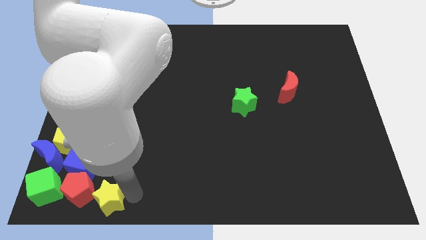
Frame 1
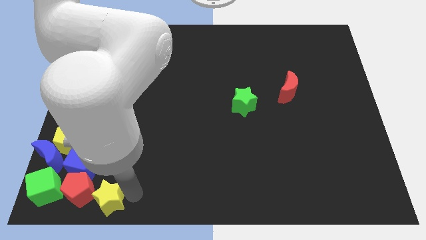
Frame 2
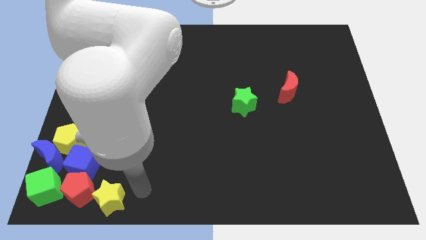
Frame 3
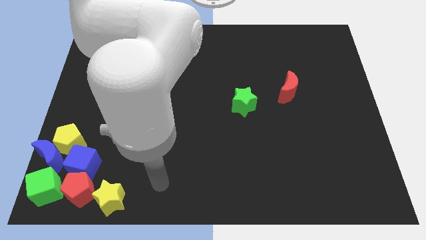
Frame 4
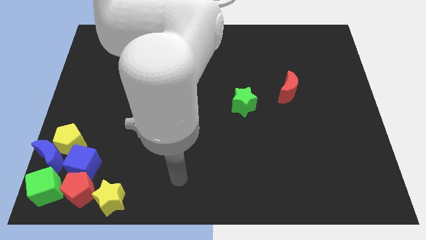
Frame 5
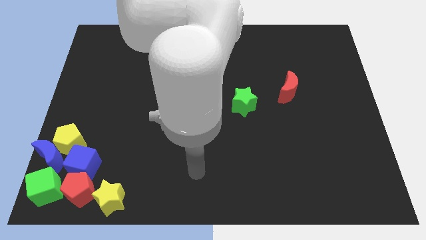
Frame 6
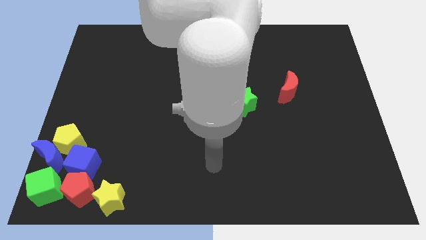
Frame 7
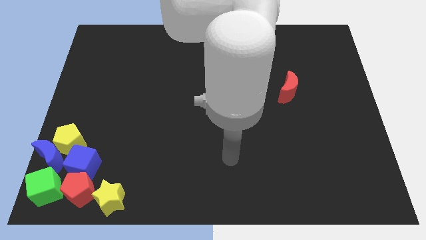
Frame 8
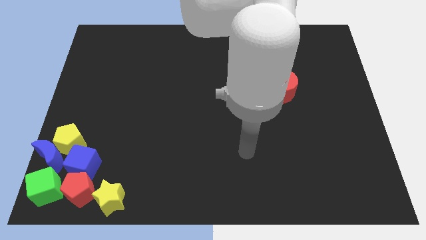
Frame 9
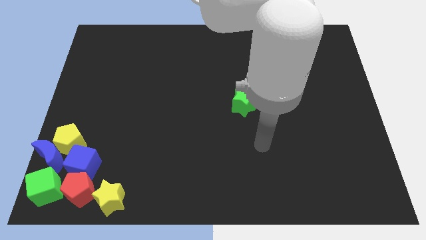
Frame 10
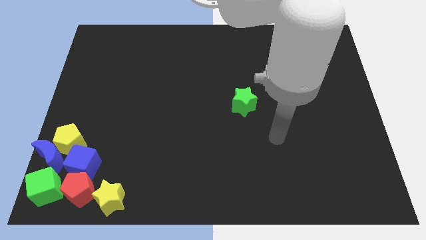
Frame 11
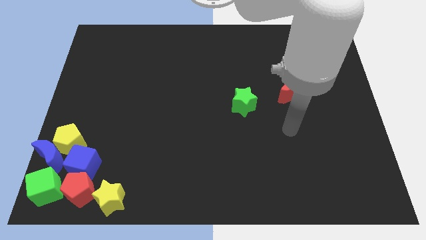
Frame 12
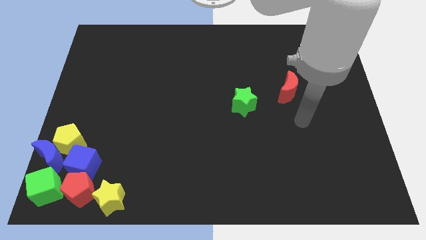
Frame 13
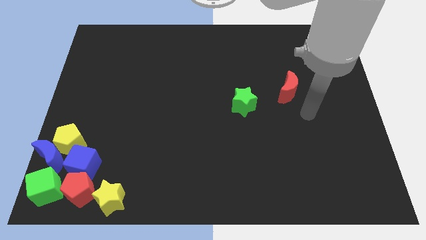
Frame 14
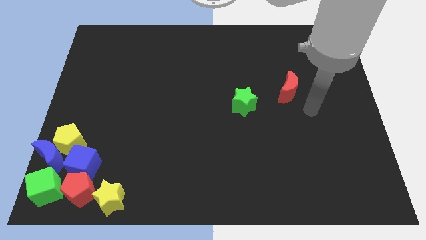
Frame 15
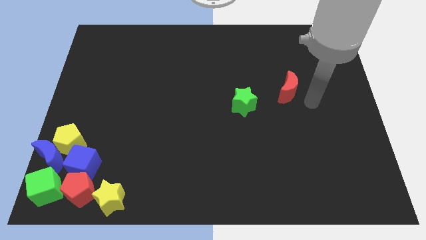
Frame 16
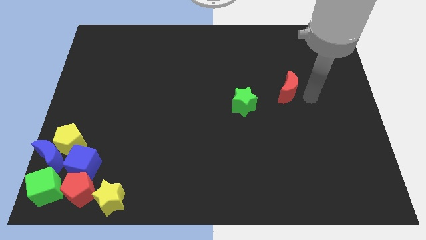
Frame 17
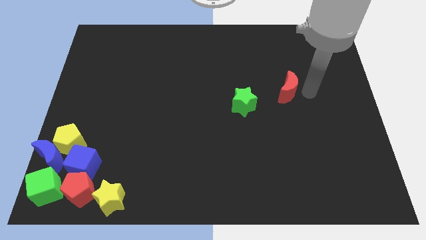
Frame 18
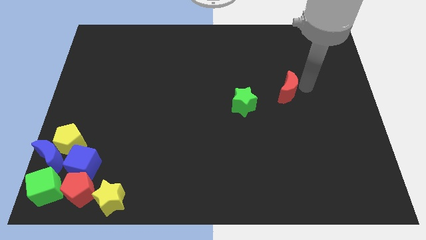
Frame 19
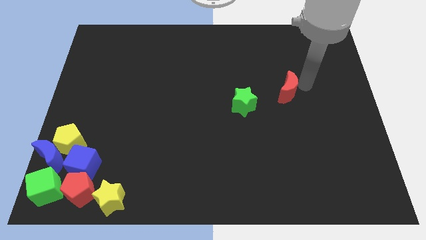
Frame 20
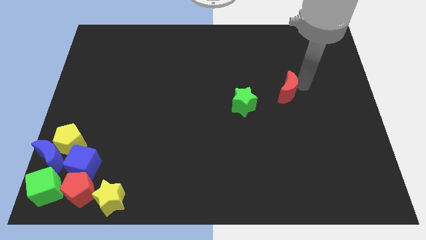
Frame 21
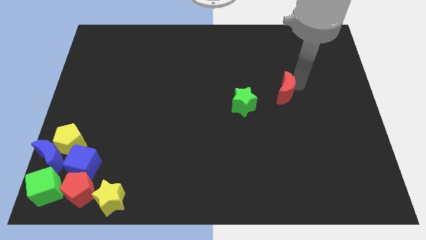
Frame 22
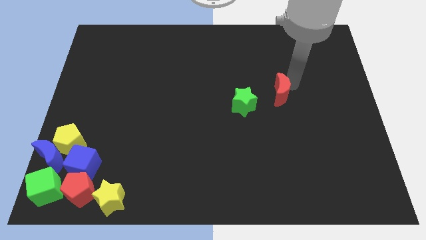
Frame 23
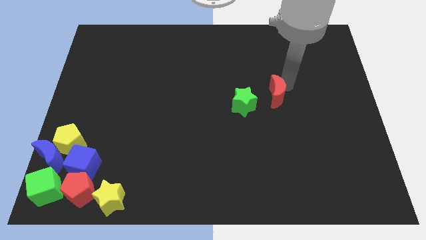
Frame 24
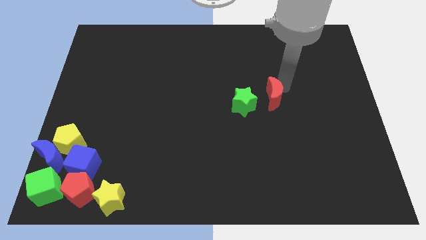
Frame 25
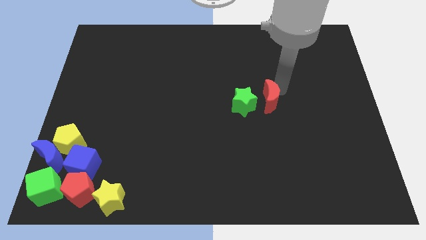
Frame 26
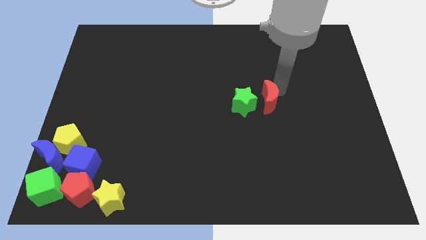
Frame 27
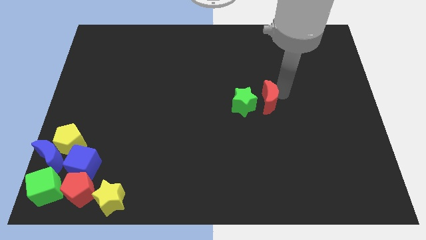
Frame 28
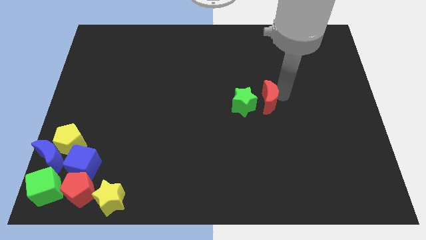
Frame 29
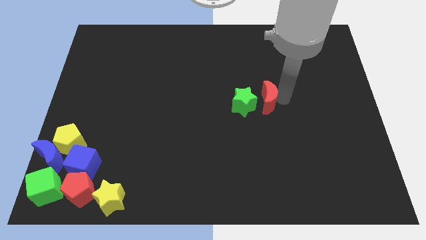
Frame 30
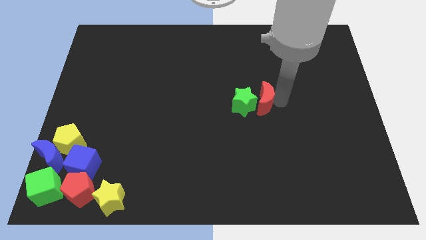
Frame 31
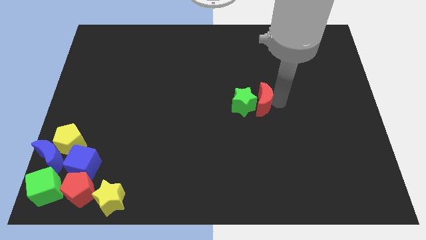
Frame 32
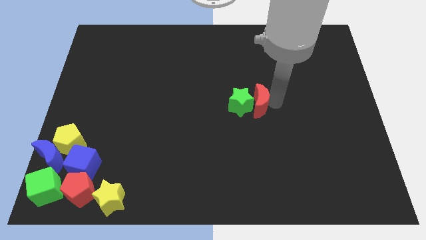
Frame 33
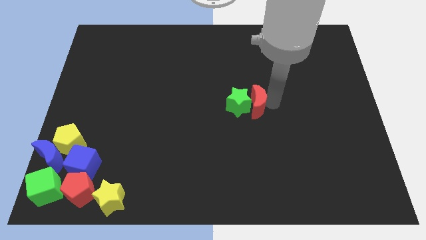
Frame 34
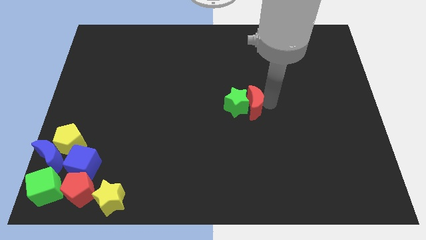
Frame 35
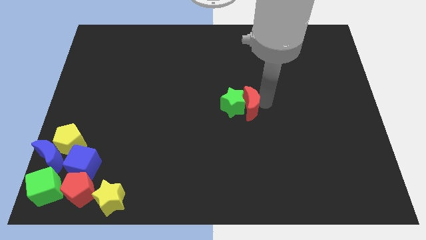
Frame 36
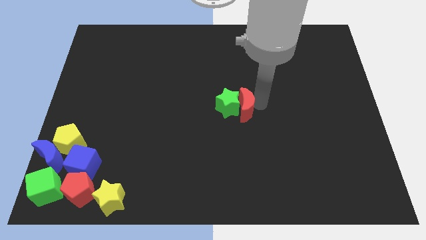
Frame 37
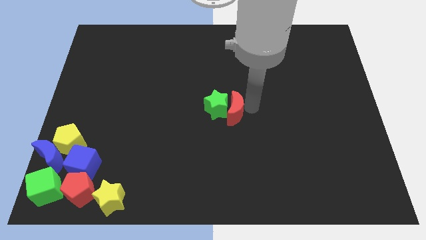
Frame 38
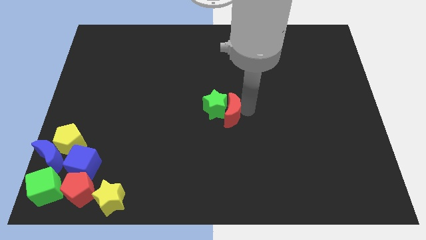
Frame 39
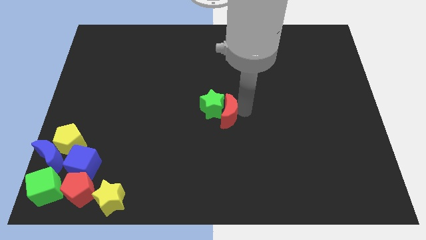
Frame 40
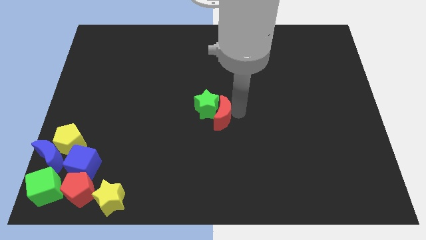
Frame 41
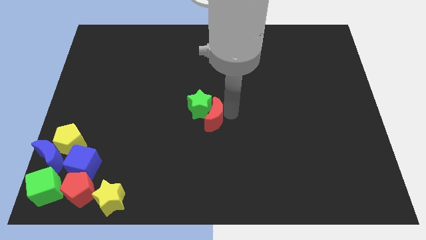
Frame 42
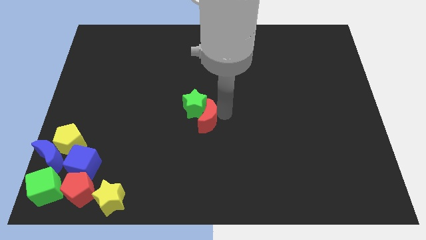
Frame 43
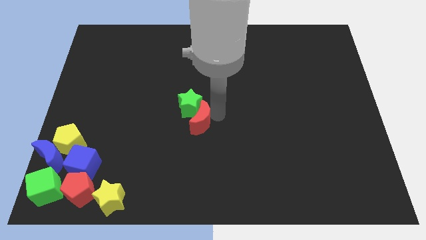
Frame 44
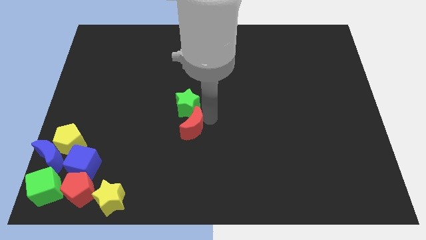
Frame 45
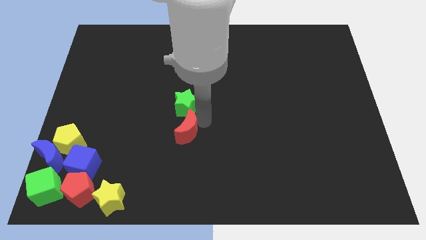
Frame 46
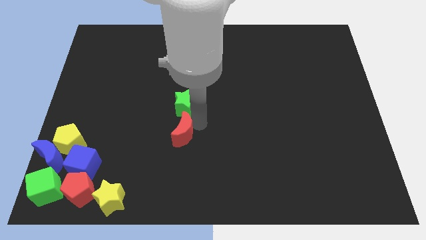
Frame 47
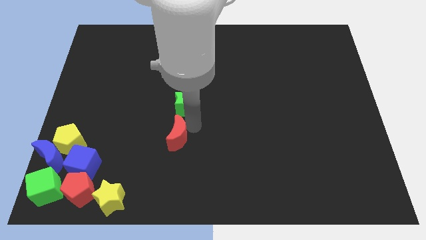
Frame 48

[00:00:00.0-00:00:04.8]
move the red crescent along with green star to the left side

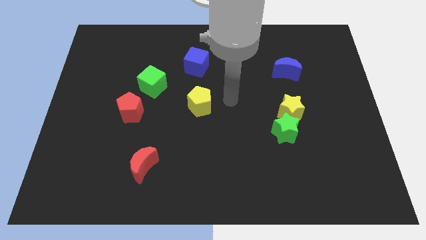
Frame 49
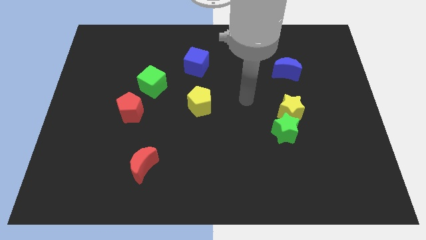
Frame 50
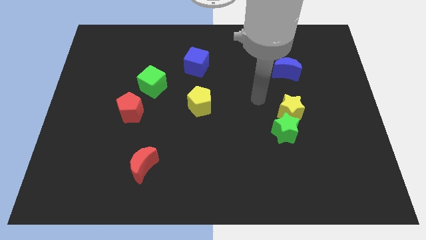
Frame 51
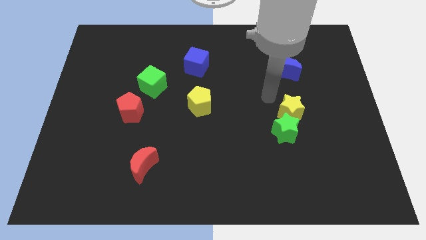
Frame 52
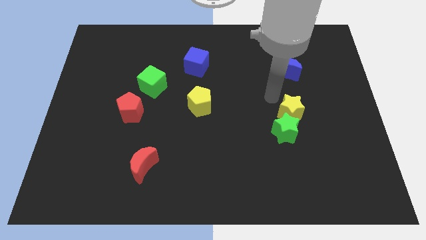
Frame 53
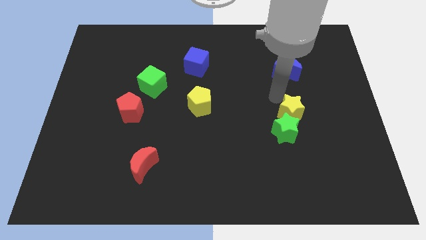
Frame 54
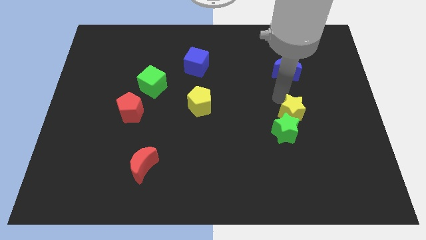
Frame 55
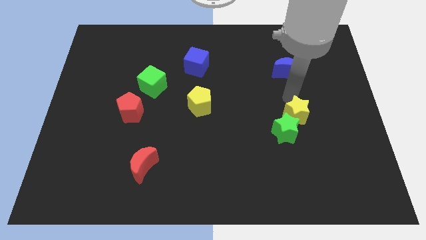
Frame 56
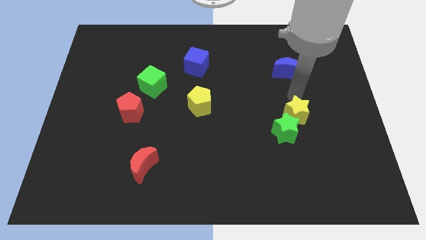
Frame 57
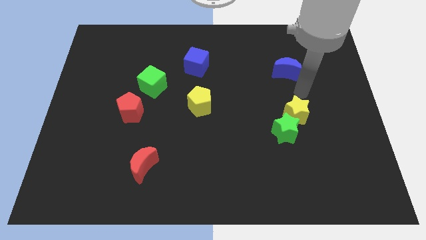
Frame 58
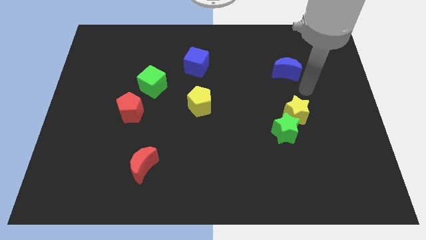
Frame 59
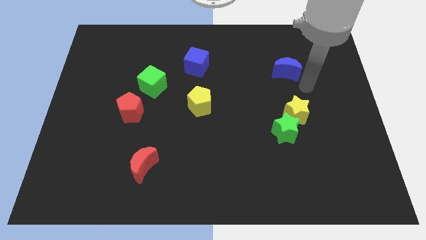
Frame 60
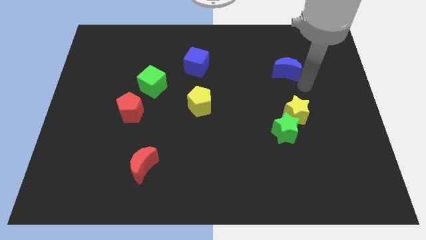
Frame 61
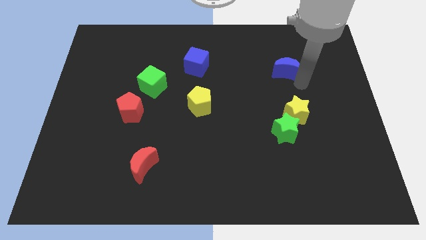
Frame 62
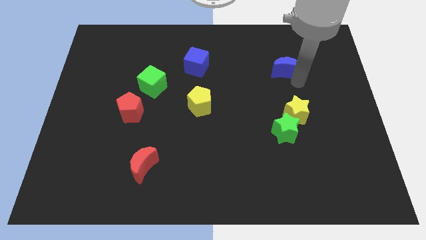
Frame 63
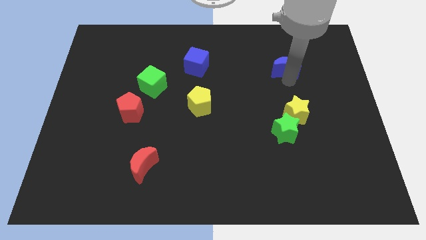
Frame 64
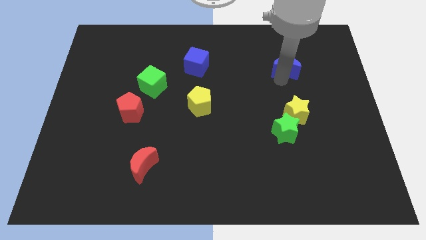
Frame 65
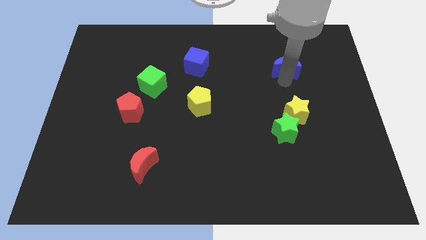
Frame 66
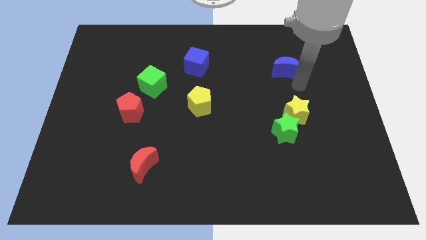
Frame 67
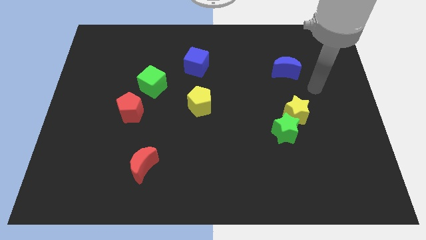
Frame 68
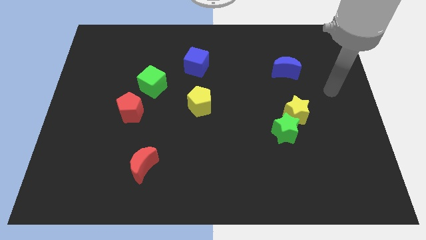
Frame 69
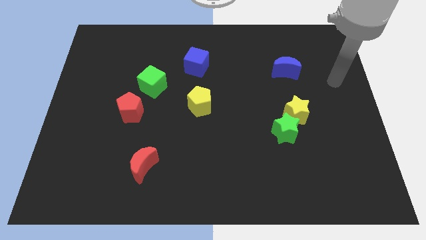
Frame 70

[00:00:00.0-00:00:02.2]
move away from the yellow pentagon

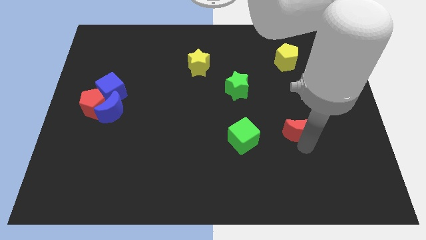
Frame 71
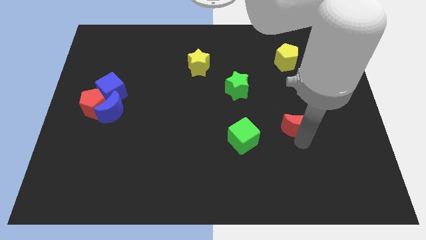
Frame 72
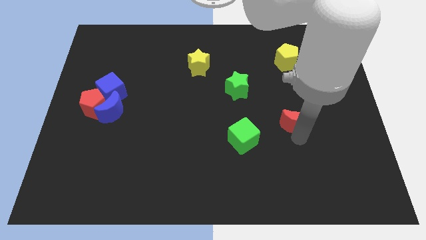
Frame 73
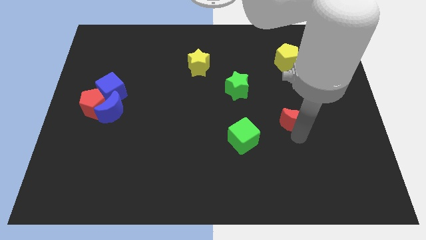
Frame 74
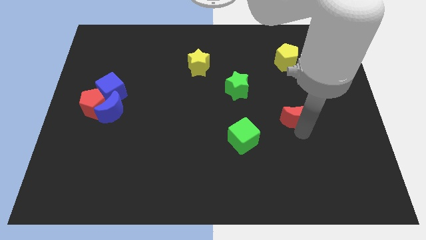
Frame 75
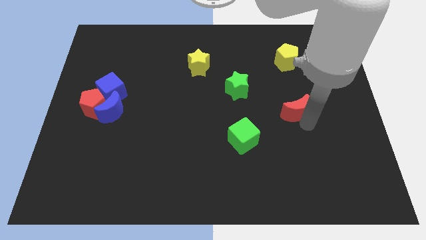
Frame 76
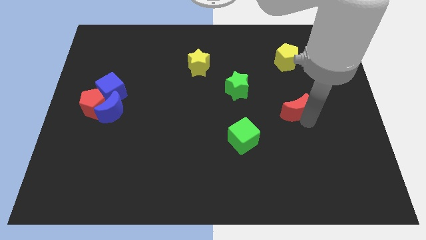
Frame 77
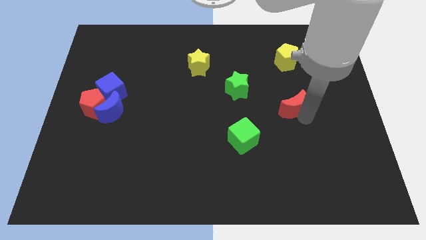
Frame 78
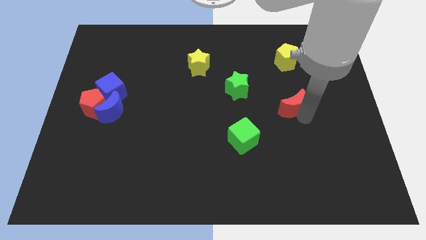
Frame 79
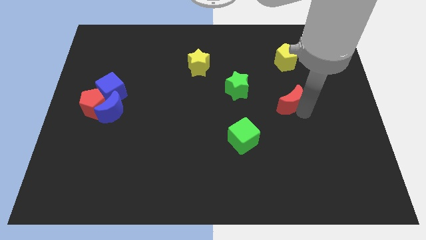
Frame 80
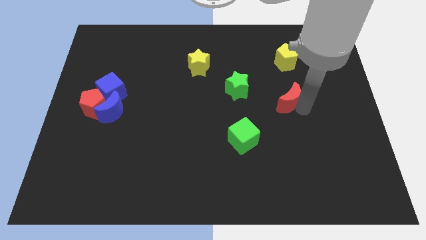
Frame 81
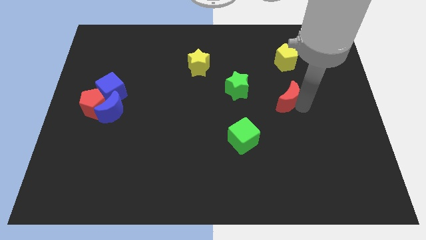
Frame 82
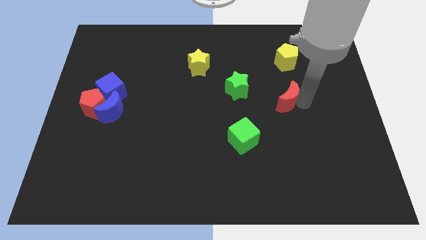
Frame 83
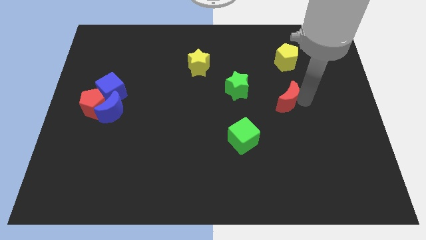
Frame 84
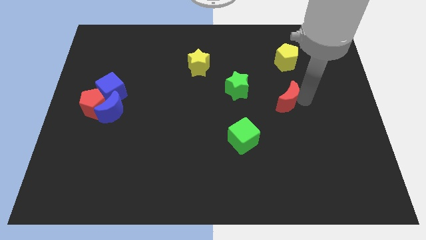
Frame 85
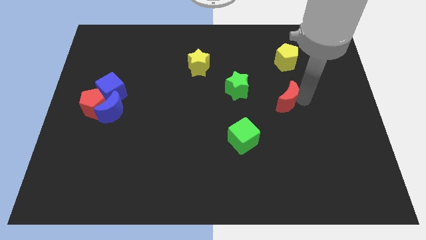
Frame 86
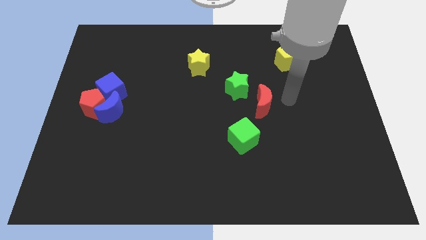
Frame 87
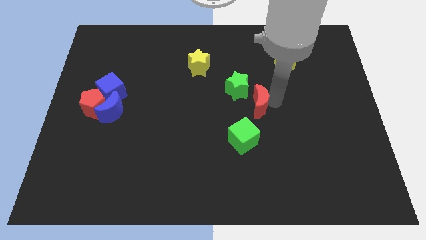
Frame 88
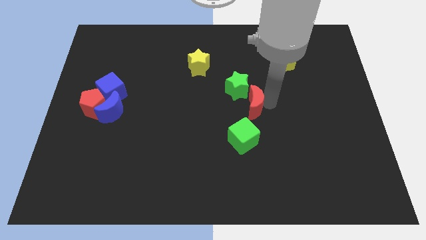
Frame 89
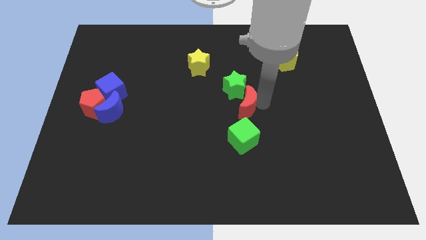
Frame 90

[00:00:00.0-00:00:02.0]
push the red crescent to the top of the green cube
